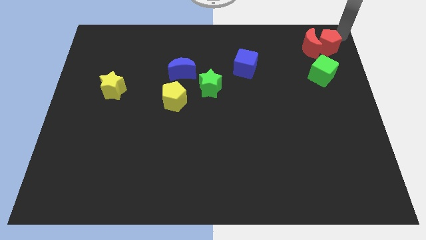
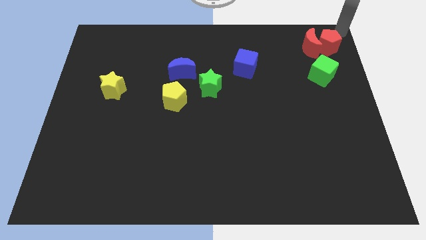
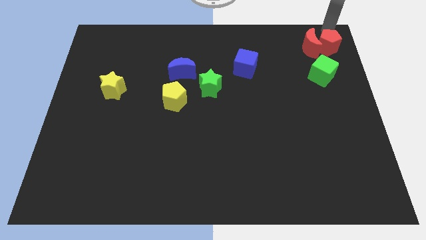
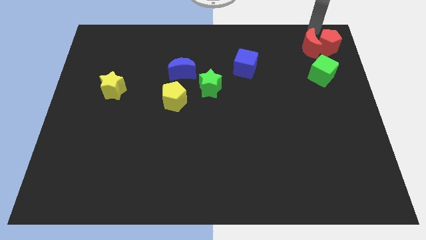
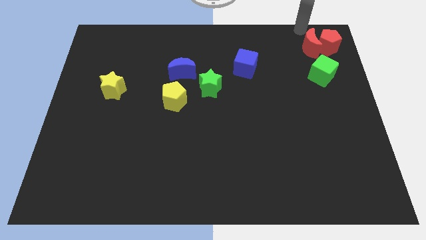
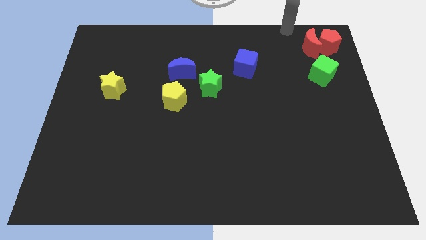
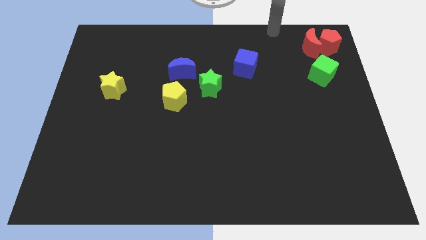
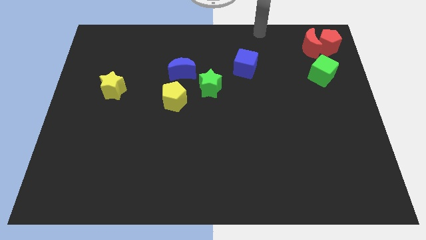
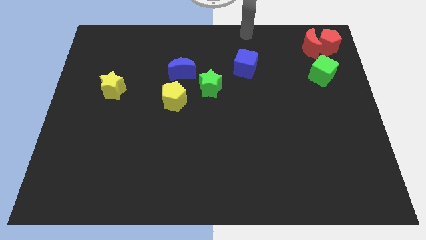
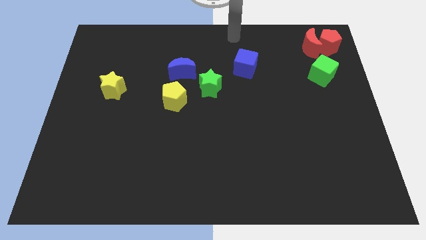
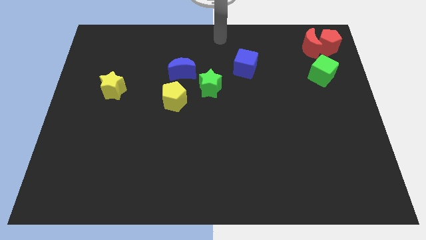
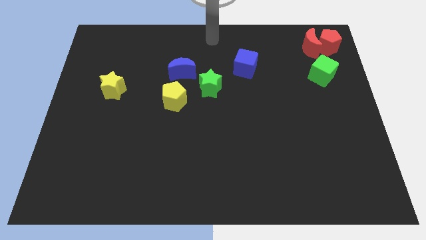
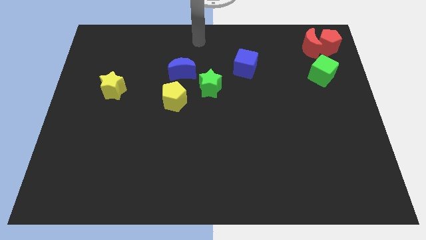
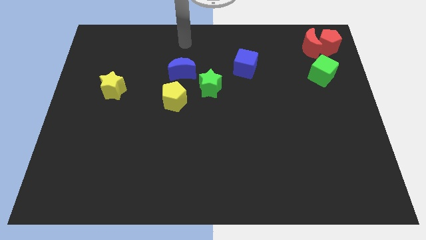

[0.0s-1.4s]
move your arm away from red pentagon

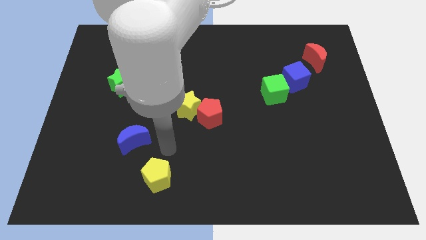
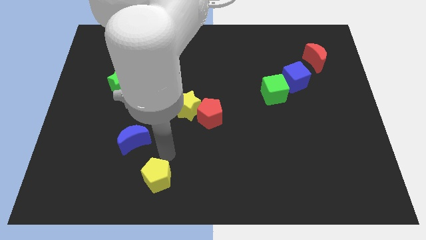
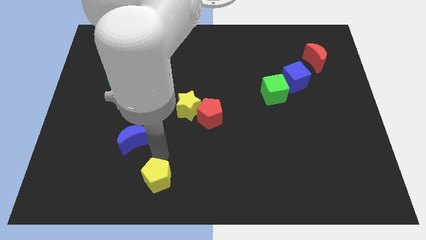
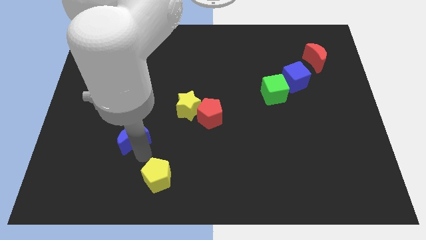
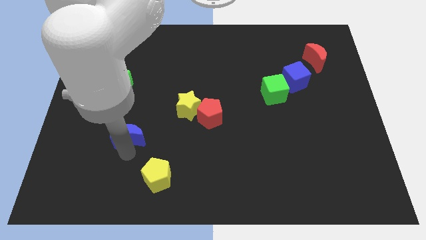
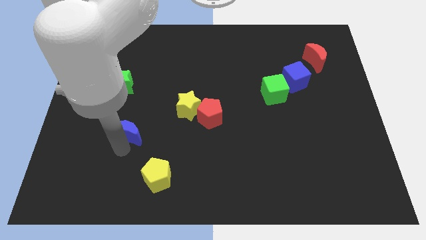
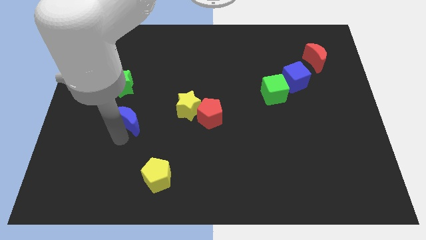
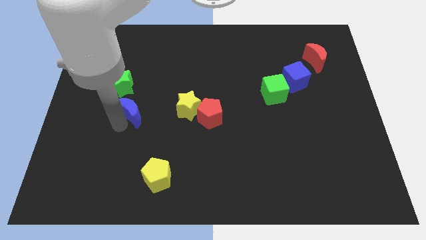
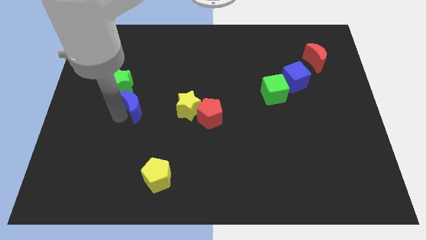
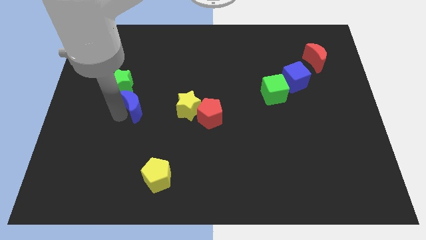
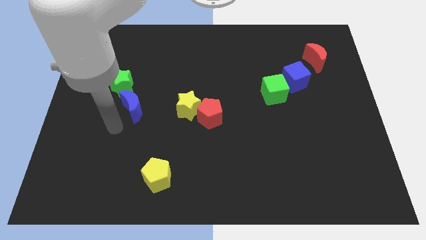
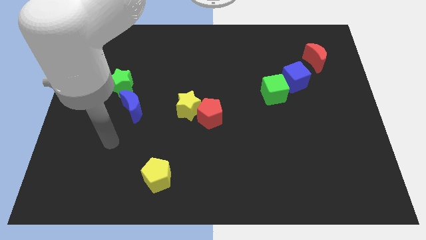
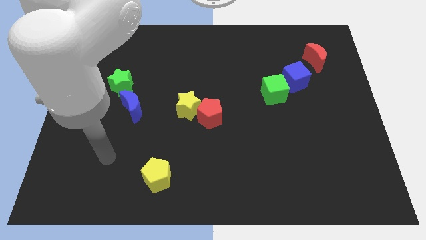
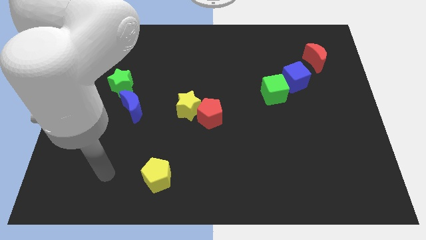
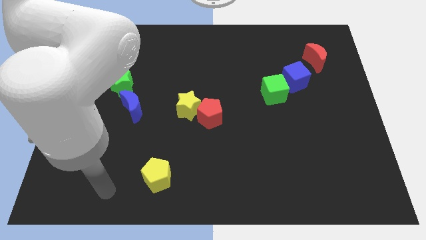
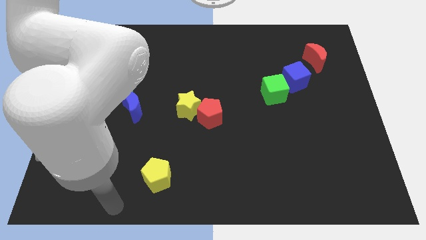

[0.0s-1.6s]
place the blue moon below the green star

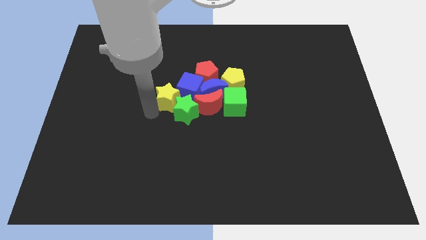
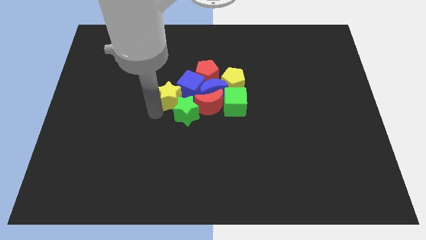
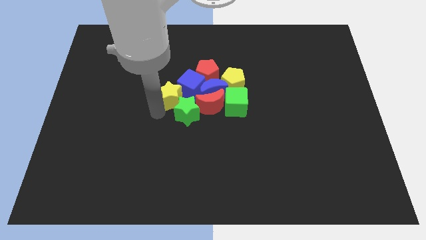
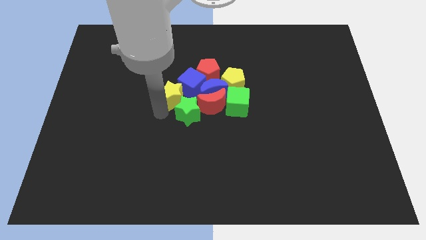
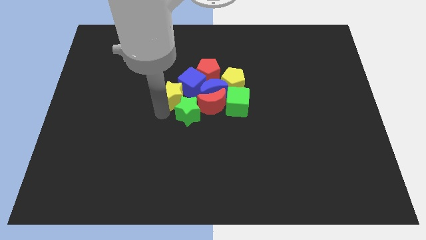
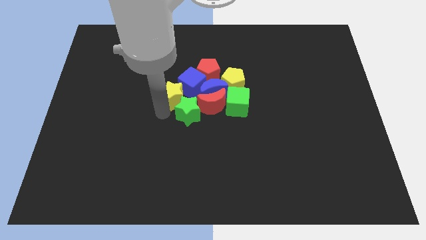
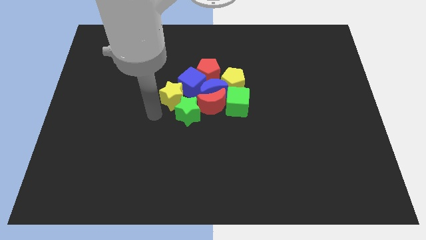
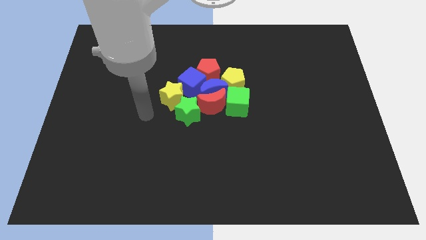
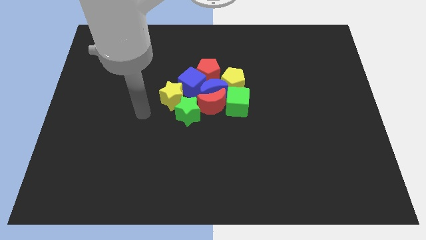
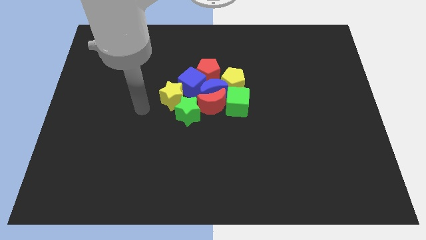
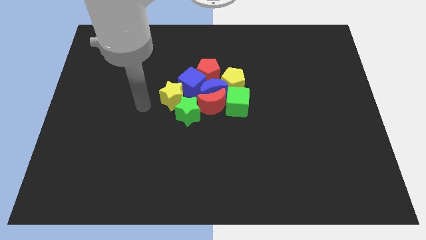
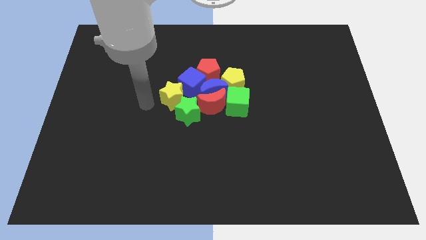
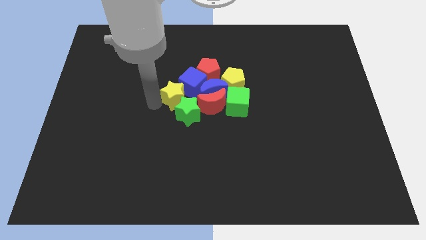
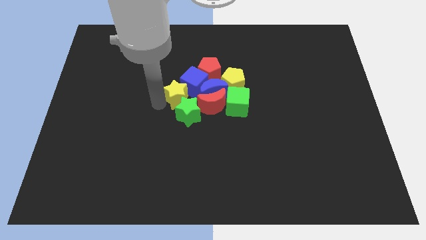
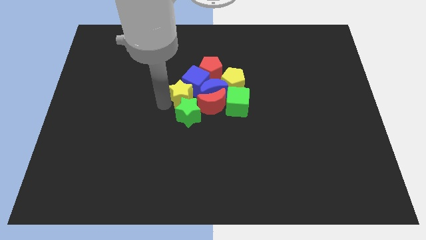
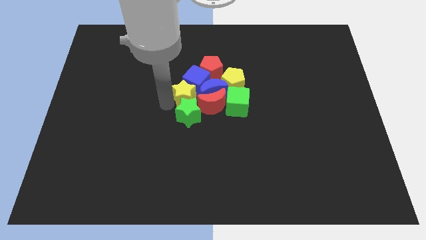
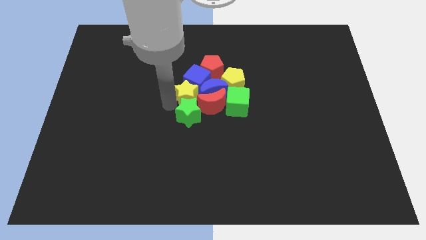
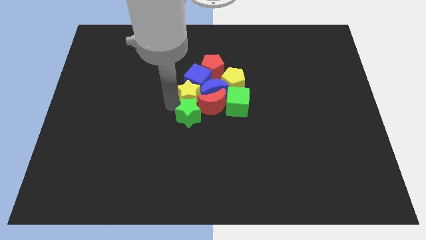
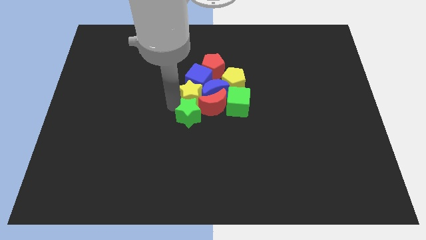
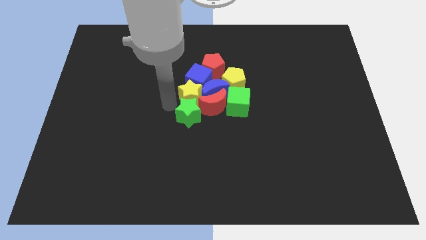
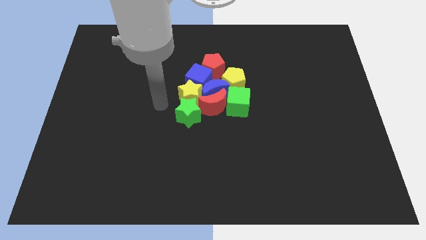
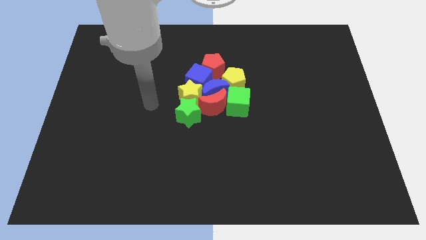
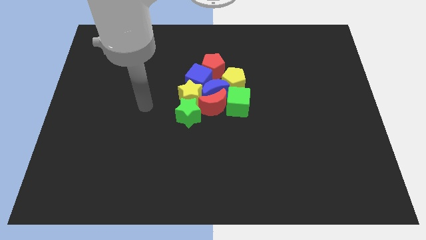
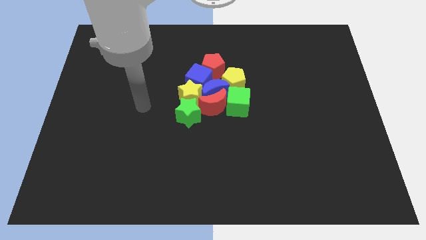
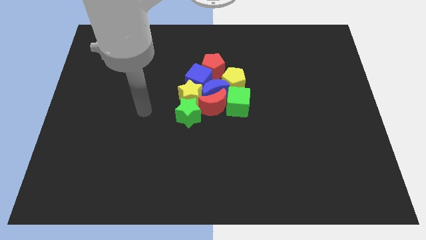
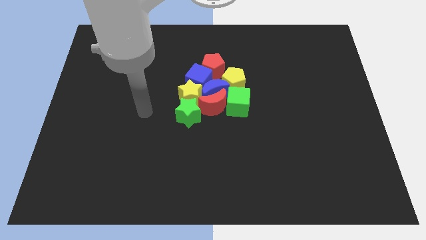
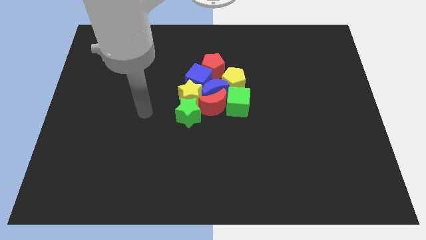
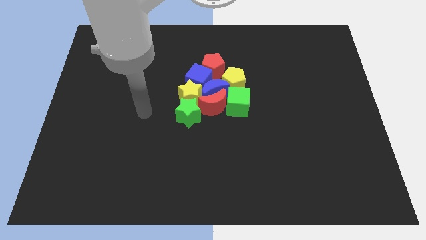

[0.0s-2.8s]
place the yellow star in between blue cube and green star

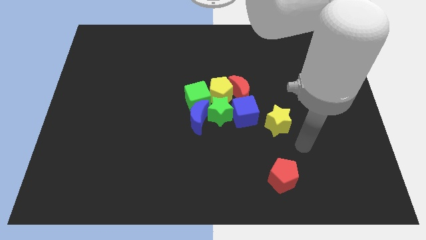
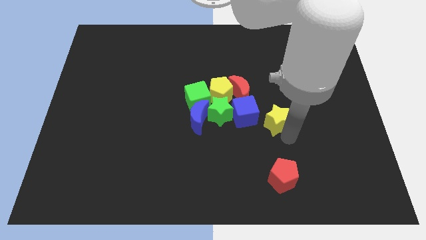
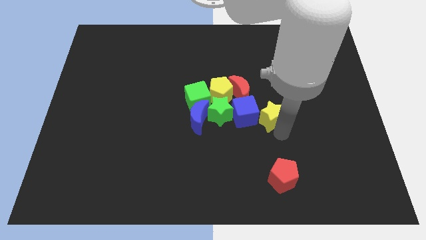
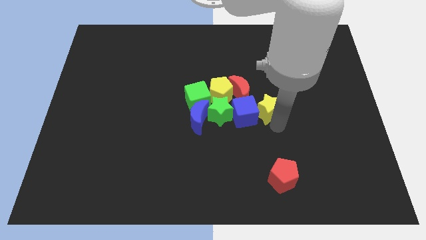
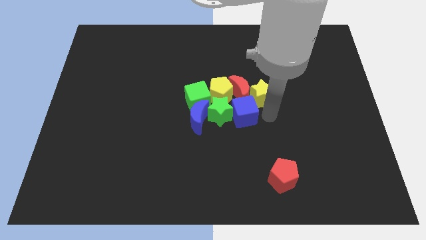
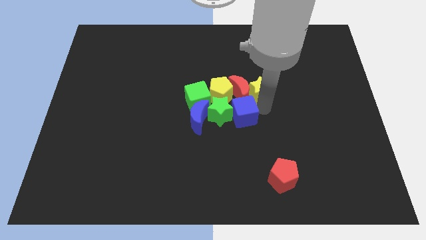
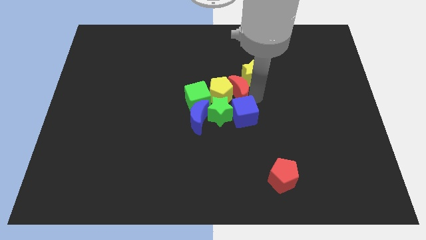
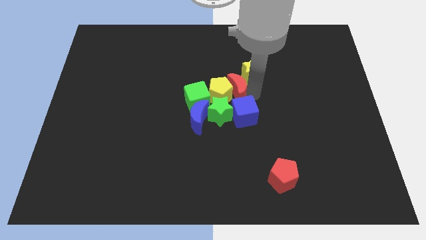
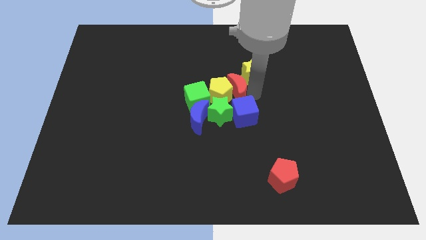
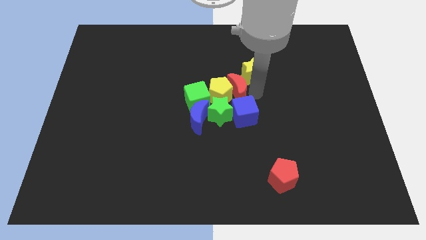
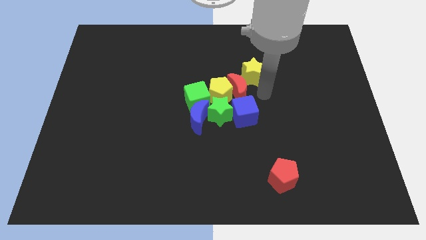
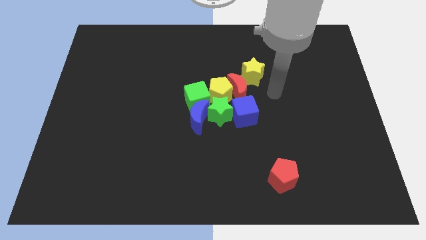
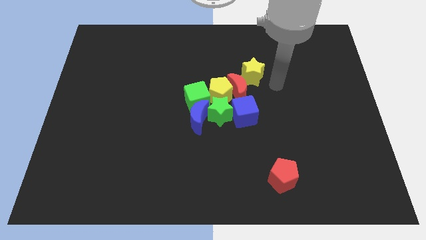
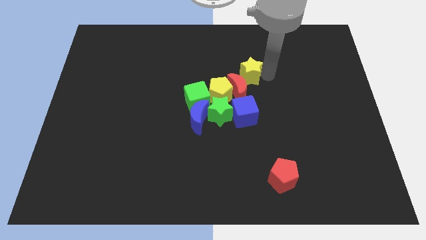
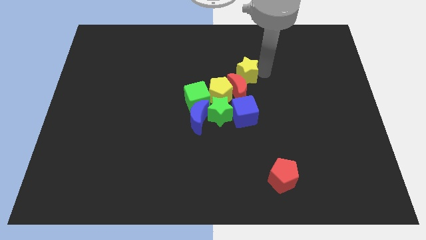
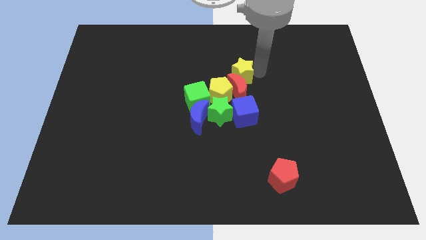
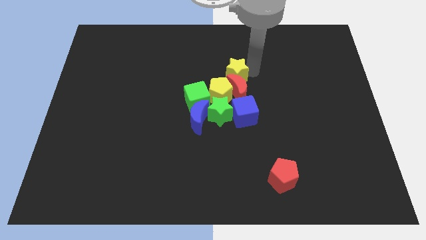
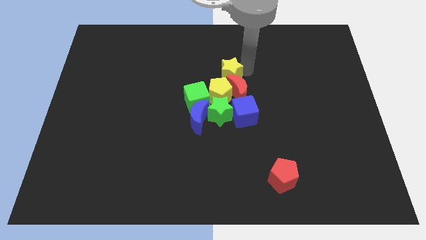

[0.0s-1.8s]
push the yellow star to the top side of the red moon

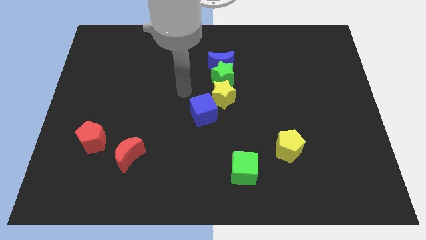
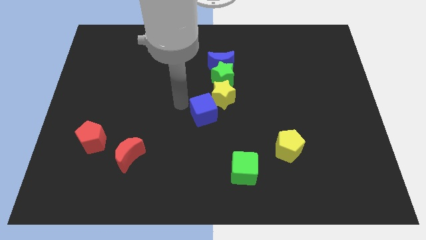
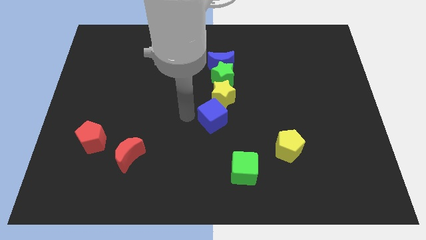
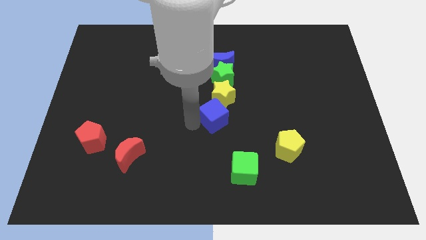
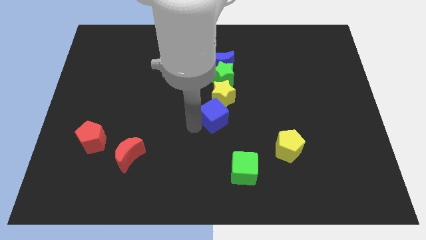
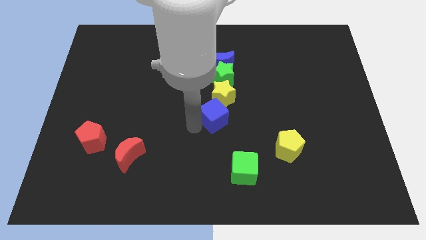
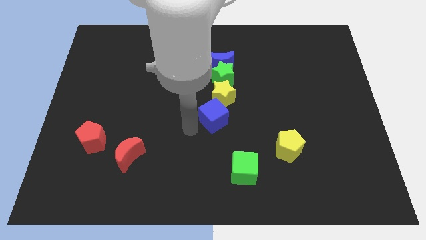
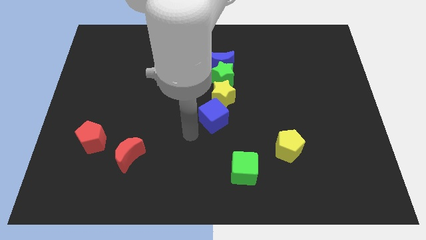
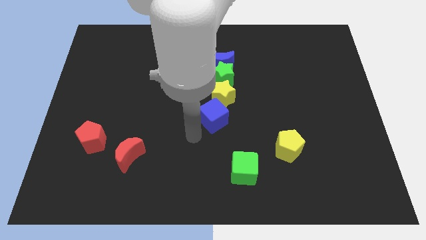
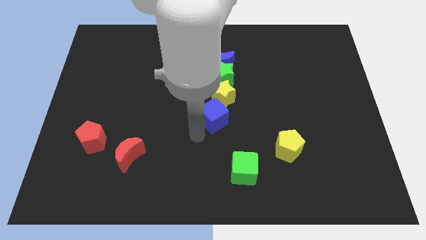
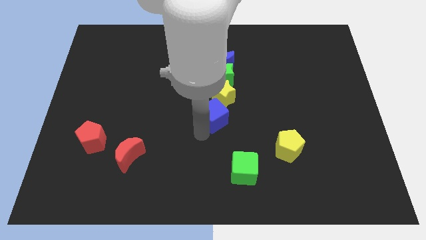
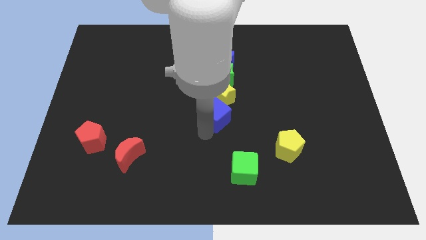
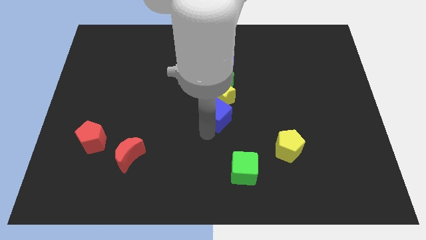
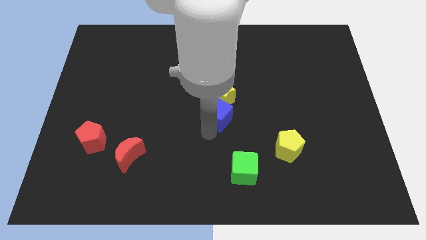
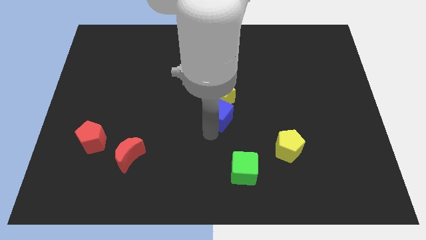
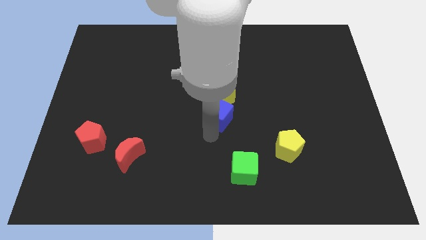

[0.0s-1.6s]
move the blue cube to the bottom of the yellow star
